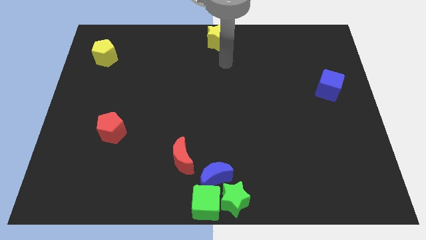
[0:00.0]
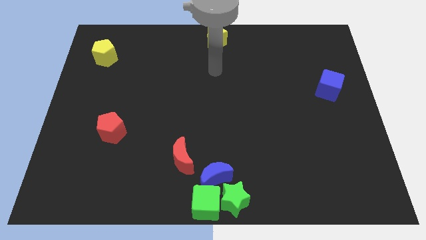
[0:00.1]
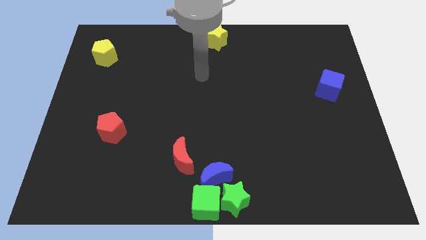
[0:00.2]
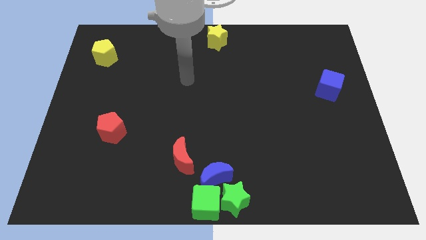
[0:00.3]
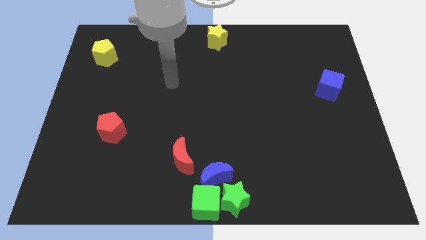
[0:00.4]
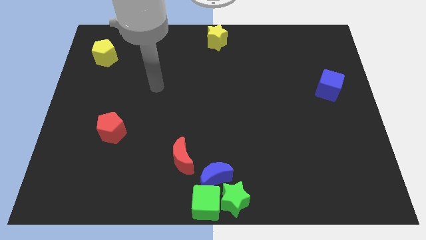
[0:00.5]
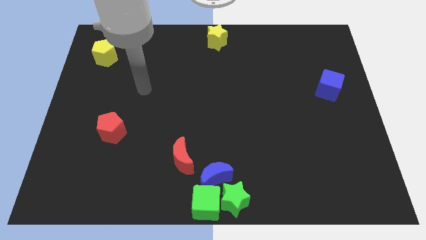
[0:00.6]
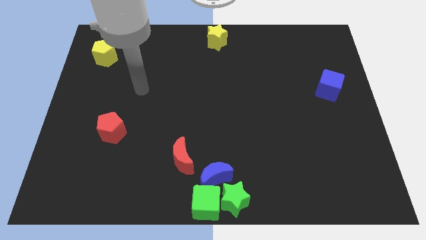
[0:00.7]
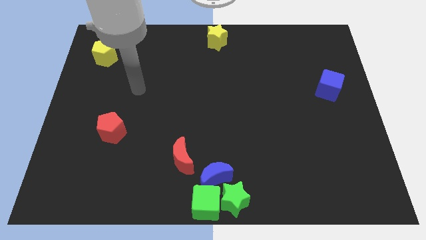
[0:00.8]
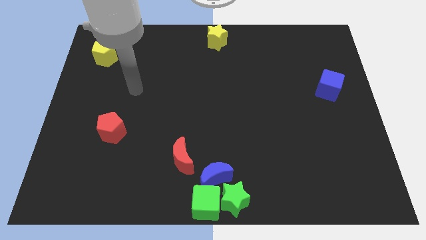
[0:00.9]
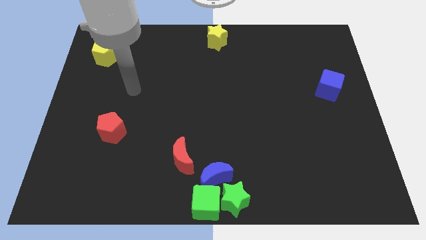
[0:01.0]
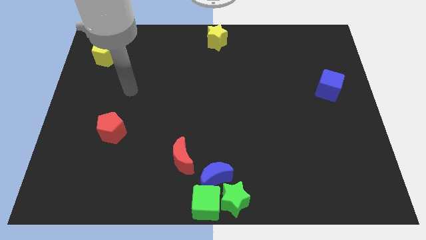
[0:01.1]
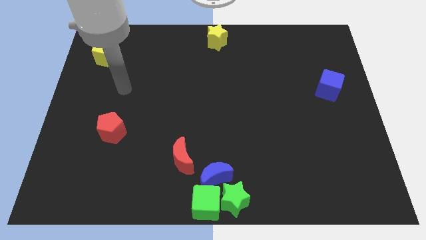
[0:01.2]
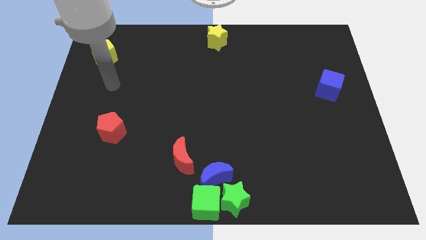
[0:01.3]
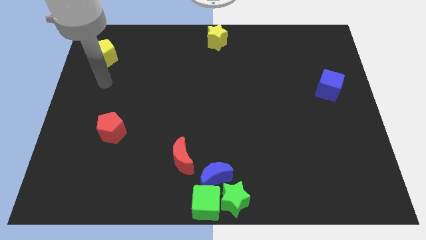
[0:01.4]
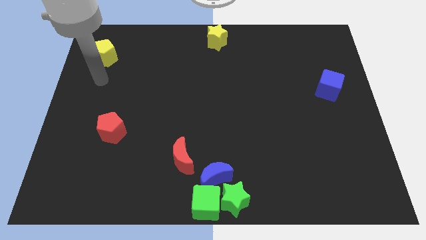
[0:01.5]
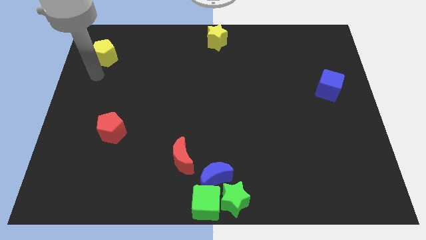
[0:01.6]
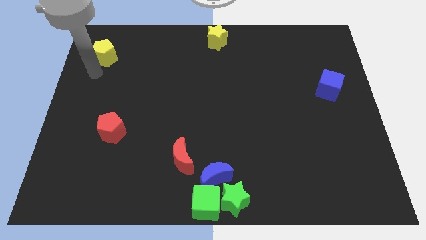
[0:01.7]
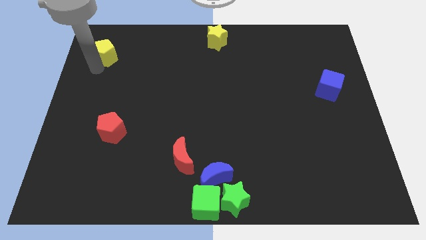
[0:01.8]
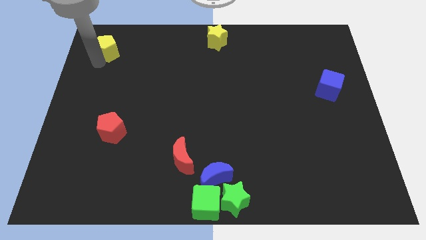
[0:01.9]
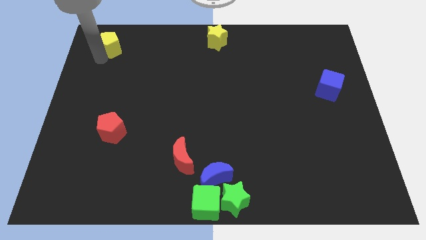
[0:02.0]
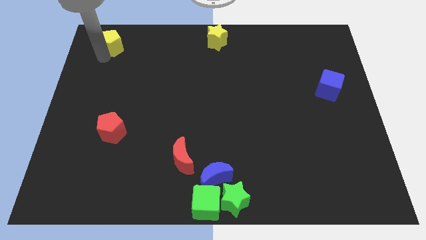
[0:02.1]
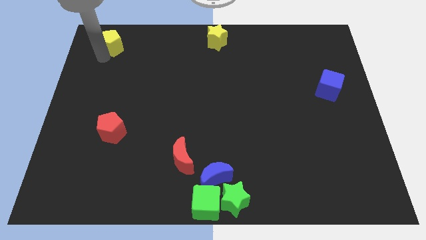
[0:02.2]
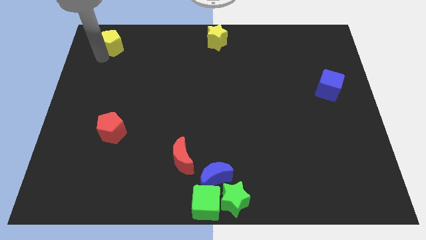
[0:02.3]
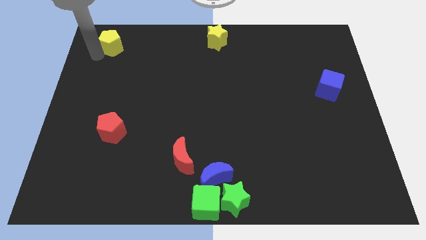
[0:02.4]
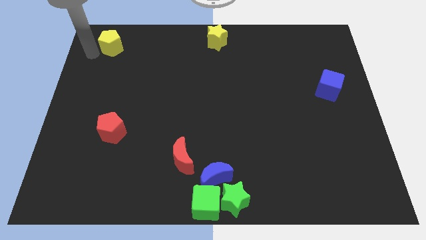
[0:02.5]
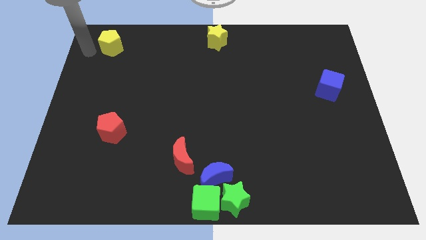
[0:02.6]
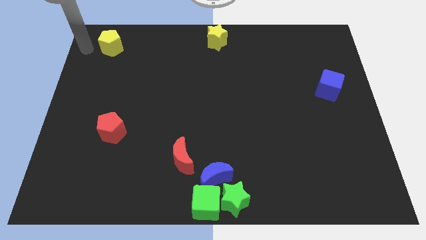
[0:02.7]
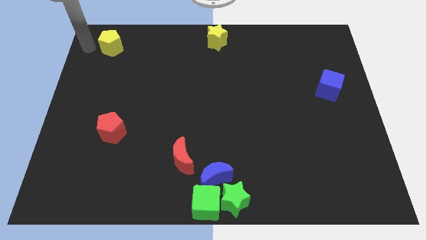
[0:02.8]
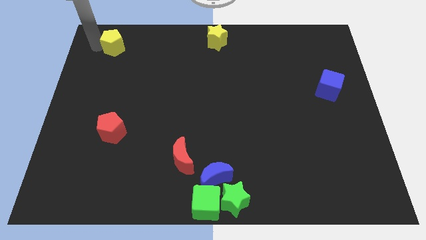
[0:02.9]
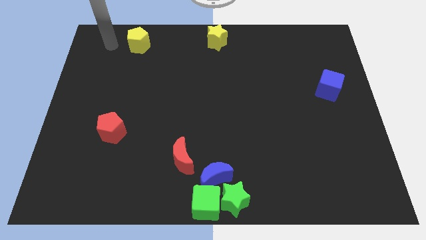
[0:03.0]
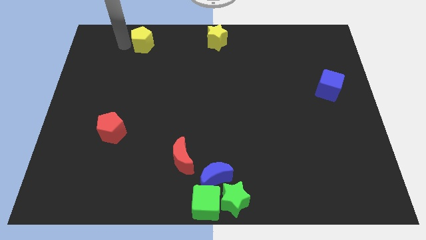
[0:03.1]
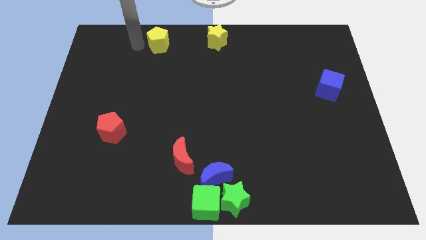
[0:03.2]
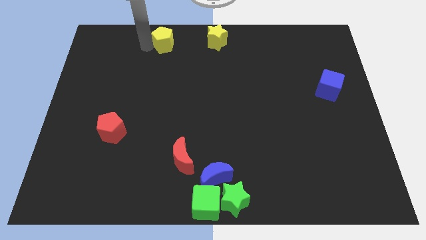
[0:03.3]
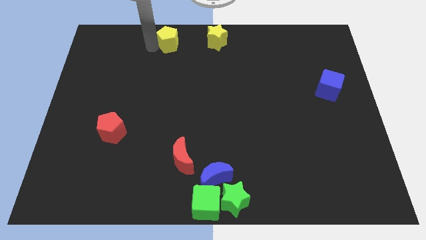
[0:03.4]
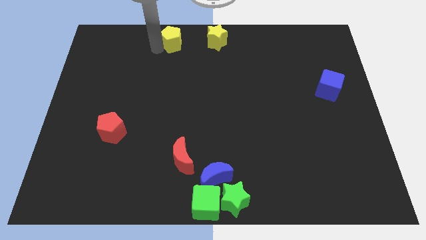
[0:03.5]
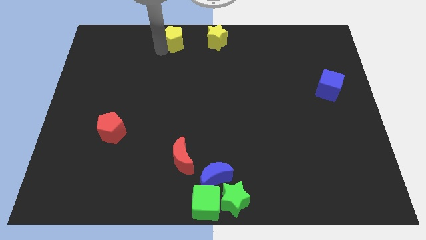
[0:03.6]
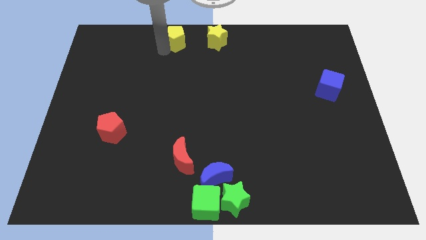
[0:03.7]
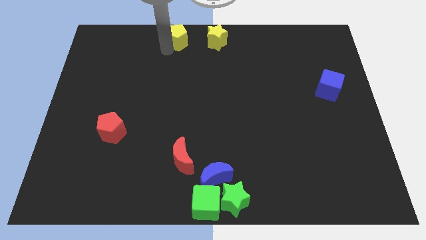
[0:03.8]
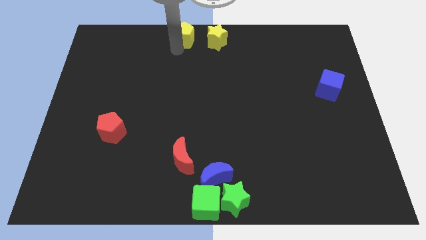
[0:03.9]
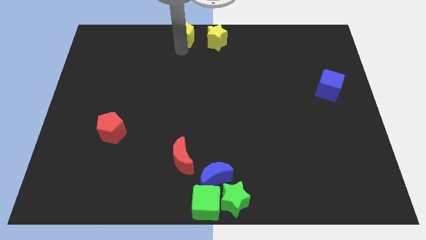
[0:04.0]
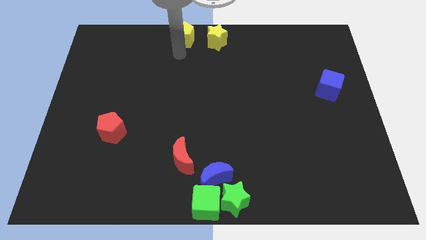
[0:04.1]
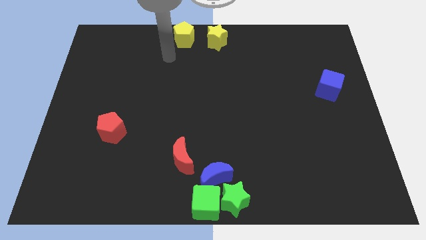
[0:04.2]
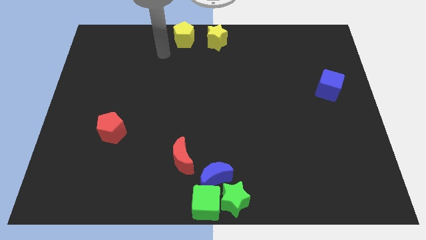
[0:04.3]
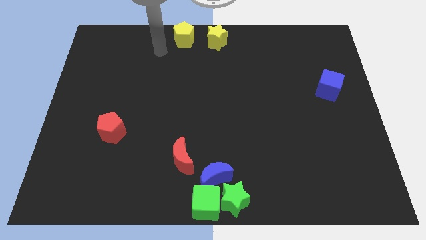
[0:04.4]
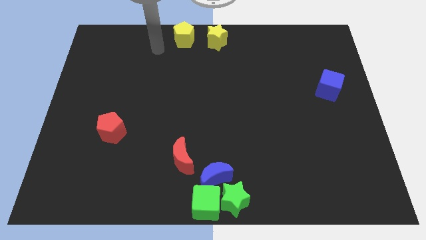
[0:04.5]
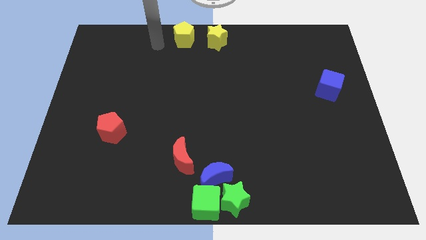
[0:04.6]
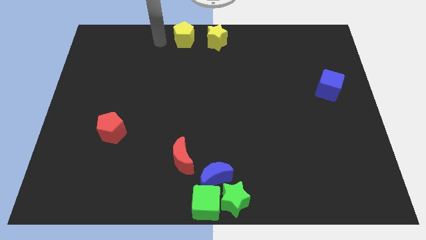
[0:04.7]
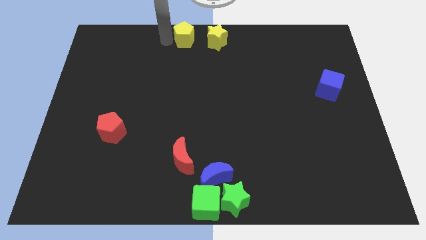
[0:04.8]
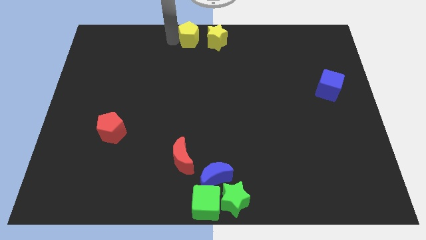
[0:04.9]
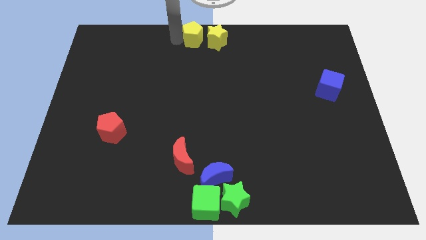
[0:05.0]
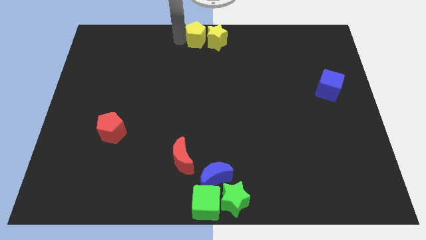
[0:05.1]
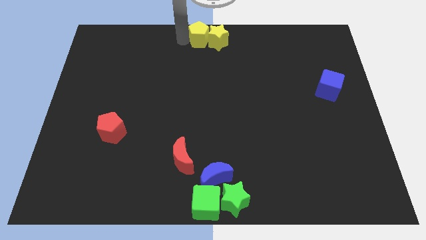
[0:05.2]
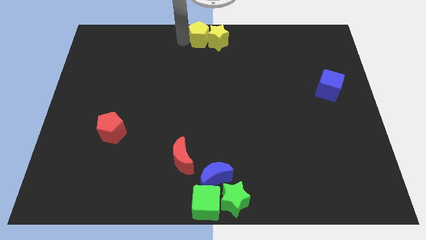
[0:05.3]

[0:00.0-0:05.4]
place the yellow pentagon at the top center of the board

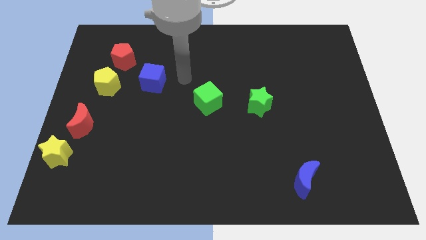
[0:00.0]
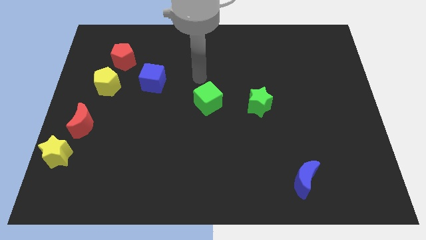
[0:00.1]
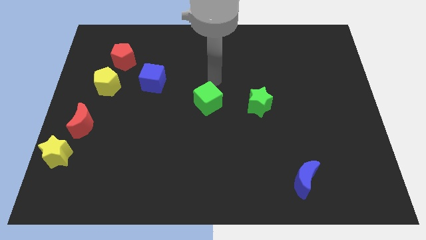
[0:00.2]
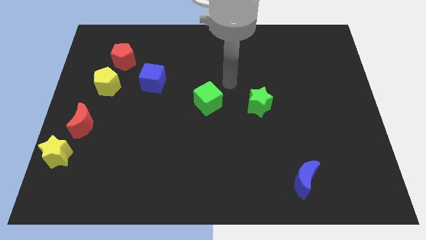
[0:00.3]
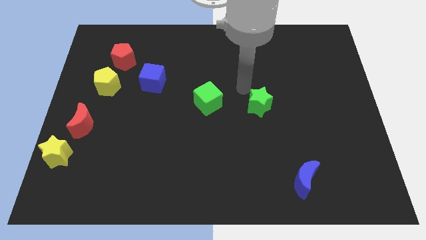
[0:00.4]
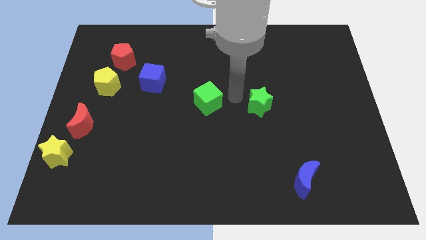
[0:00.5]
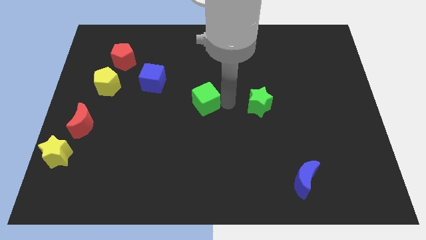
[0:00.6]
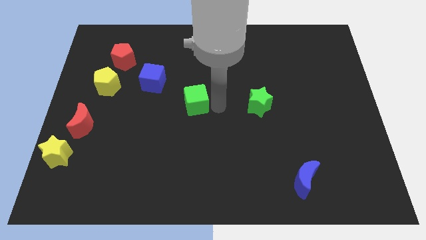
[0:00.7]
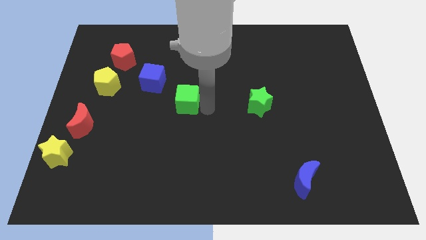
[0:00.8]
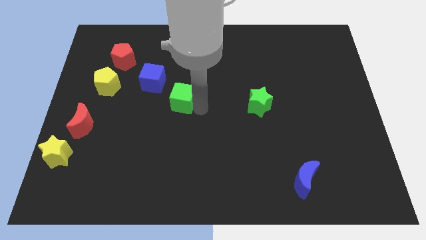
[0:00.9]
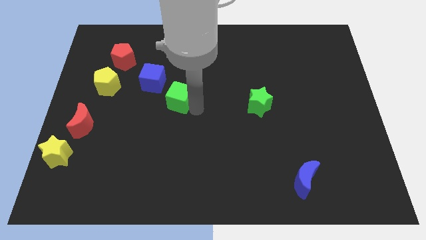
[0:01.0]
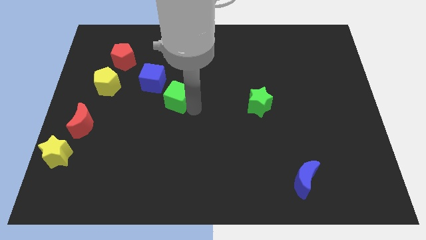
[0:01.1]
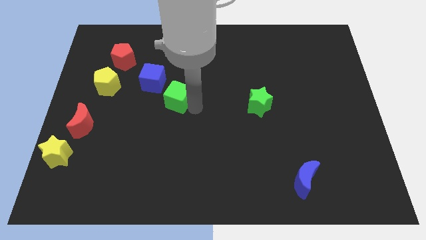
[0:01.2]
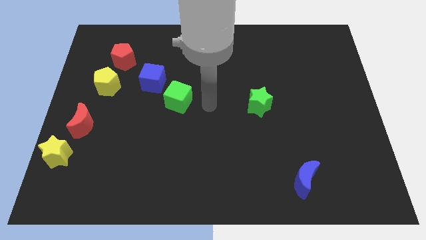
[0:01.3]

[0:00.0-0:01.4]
move the green cube towards the right side of the blue cube

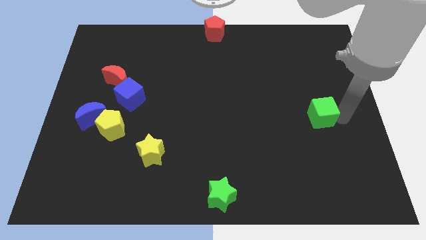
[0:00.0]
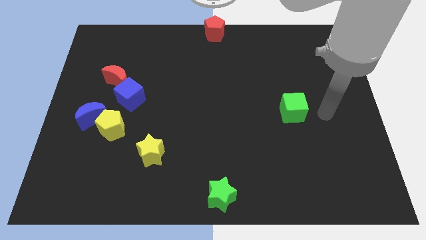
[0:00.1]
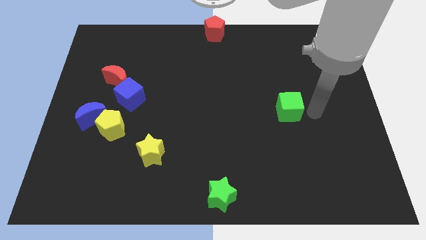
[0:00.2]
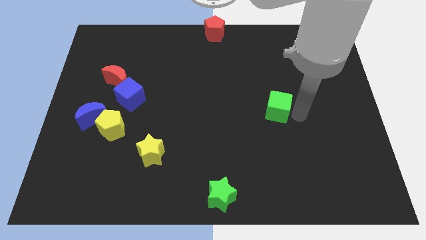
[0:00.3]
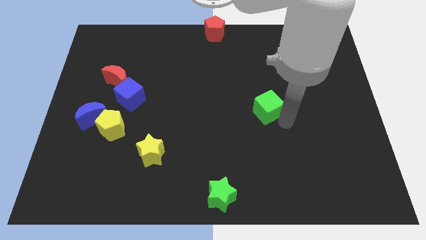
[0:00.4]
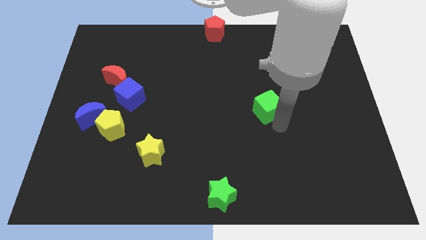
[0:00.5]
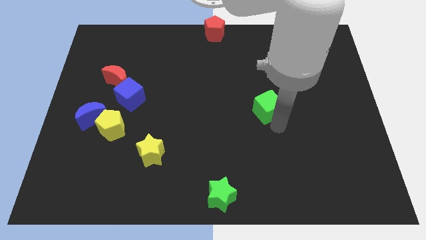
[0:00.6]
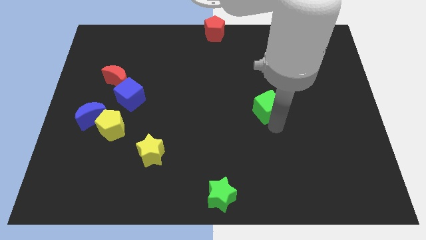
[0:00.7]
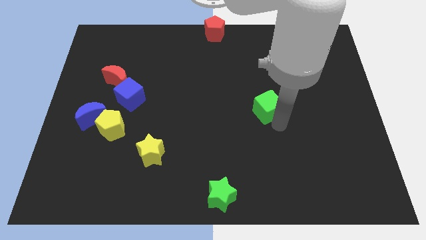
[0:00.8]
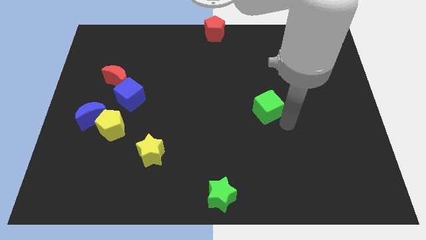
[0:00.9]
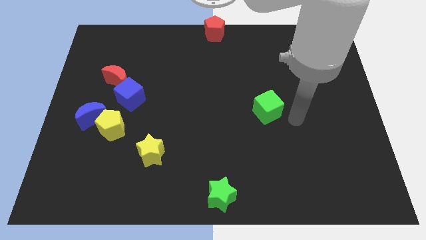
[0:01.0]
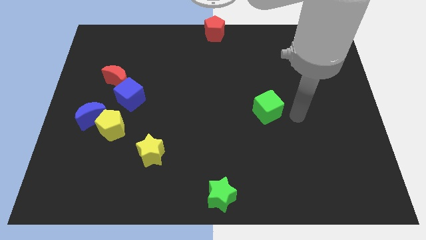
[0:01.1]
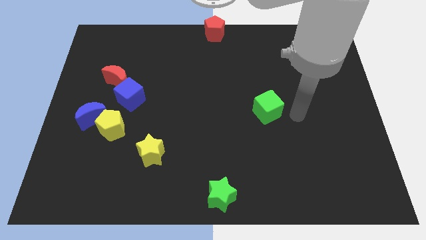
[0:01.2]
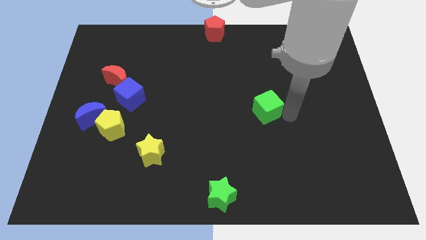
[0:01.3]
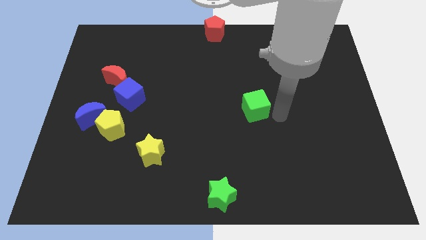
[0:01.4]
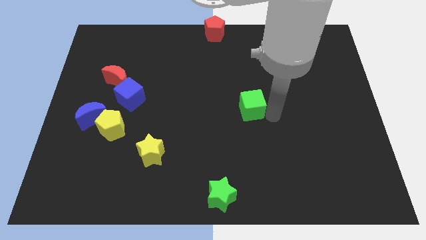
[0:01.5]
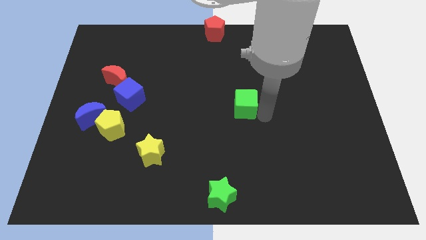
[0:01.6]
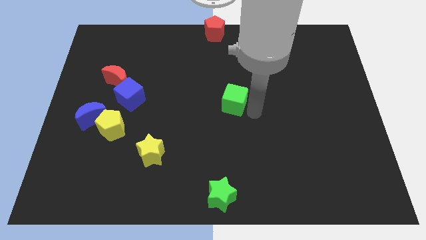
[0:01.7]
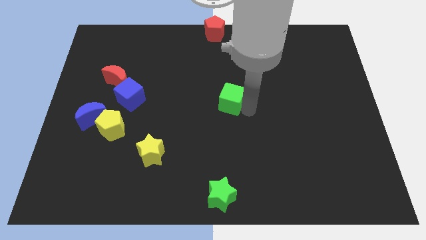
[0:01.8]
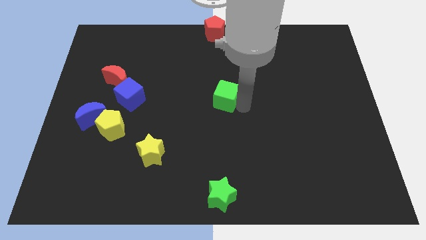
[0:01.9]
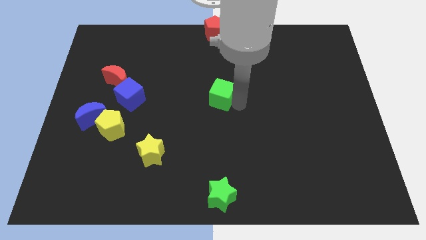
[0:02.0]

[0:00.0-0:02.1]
place the green cube in between the green star and red pentagon
